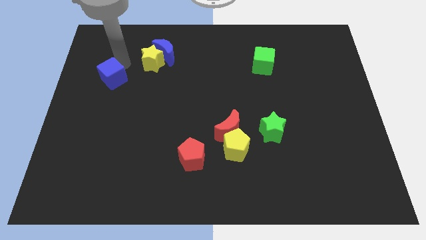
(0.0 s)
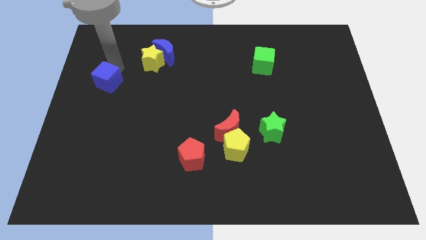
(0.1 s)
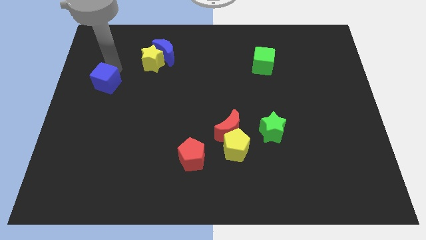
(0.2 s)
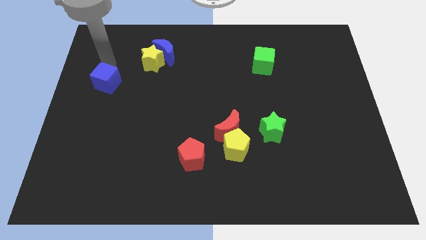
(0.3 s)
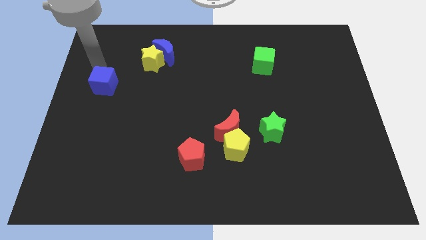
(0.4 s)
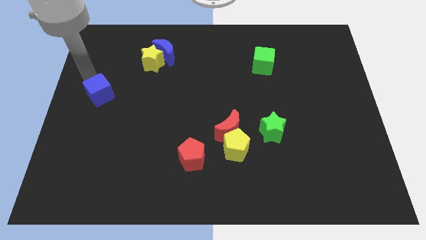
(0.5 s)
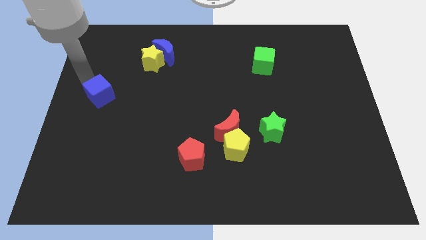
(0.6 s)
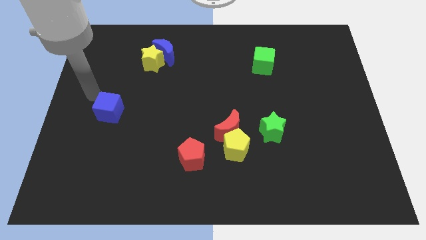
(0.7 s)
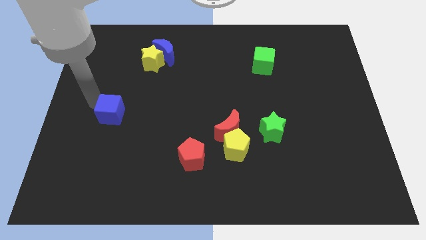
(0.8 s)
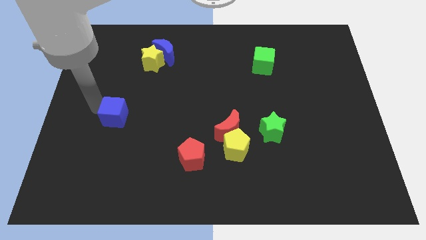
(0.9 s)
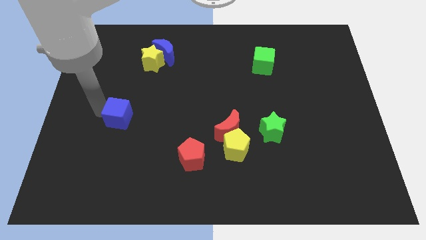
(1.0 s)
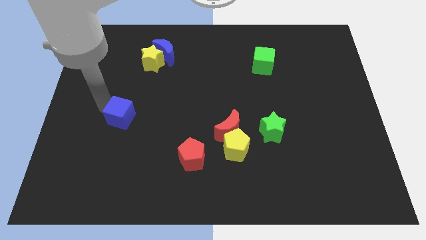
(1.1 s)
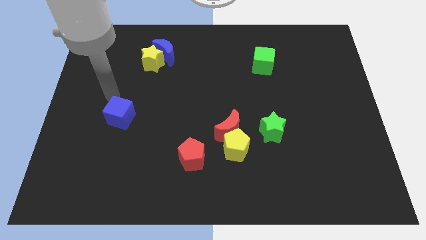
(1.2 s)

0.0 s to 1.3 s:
push the blue cube towards the red pentagon

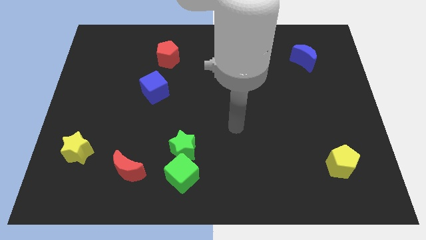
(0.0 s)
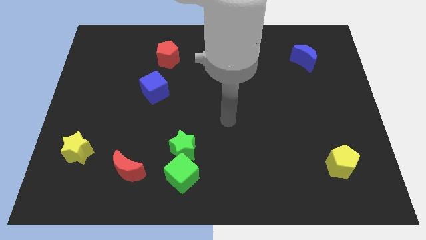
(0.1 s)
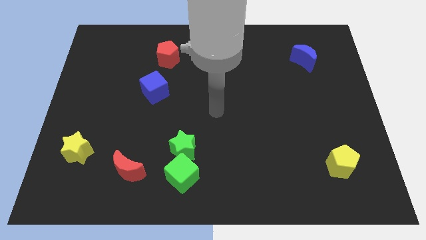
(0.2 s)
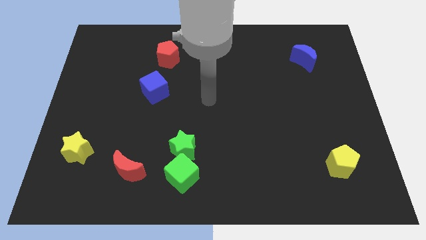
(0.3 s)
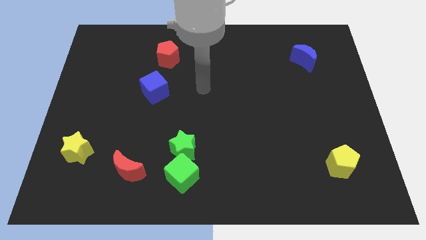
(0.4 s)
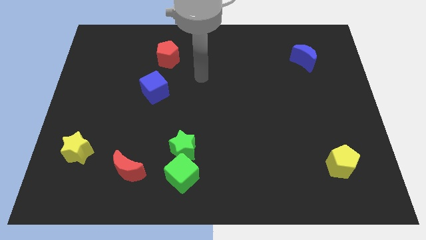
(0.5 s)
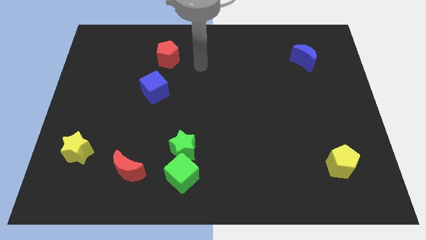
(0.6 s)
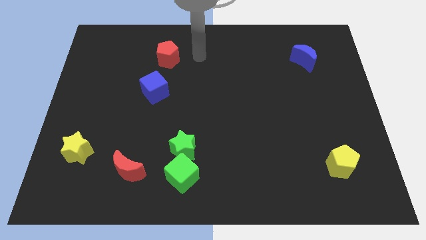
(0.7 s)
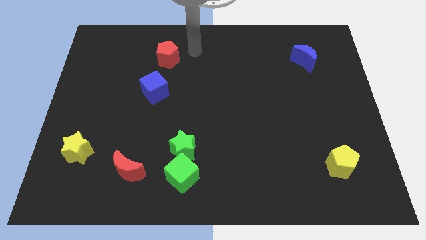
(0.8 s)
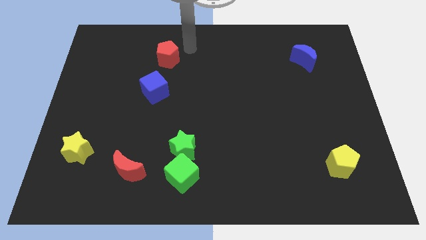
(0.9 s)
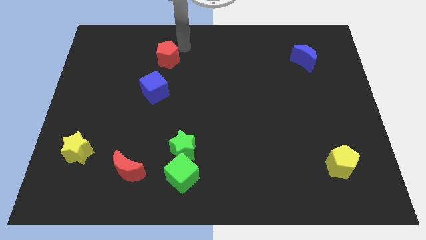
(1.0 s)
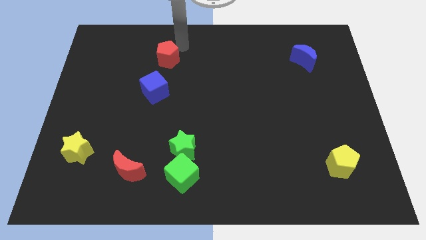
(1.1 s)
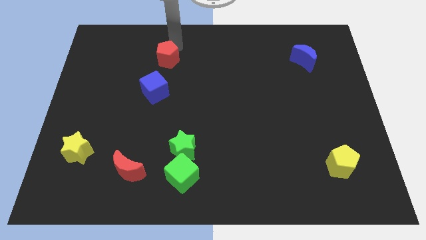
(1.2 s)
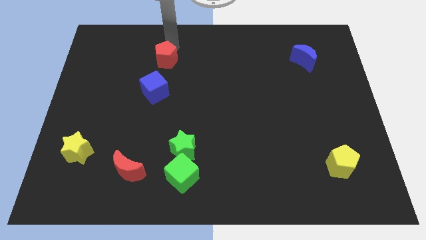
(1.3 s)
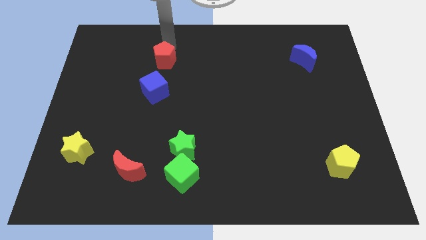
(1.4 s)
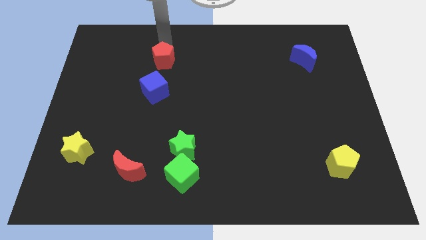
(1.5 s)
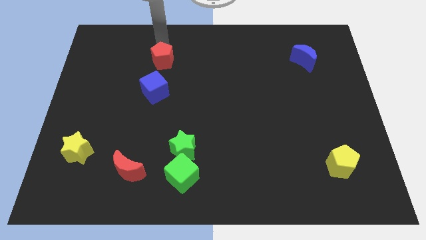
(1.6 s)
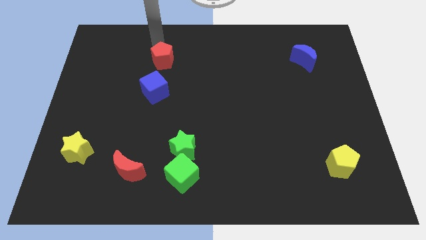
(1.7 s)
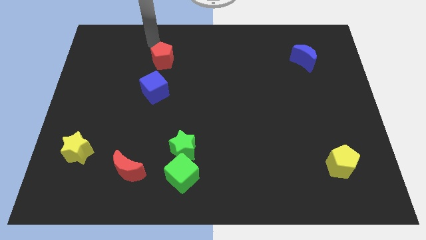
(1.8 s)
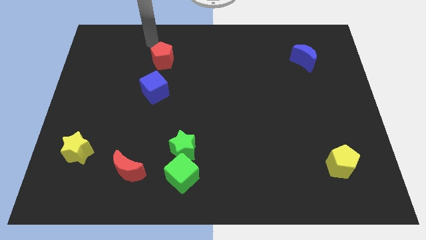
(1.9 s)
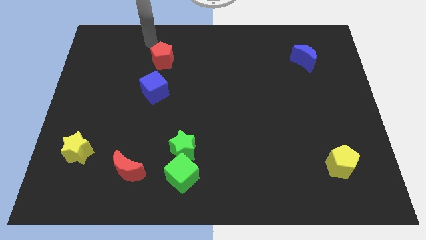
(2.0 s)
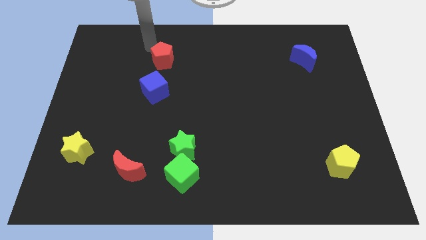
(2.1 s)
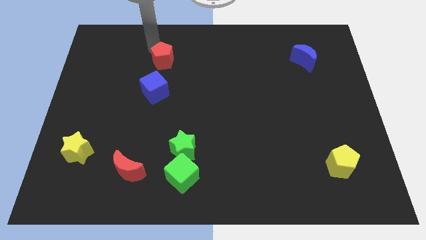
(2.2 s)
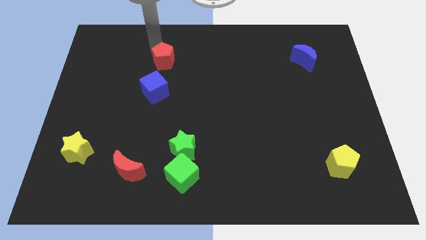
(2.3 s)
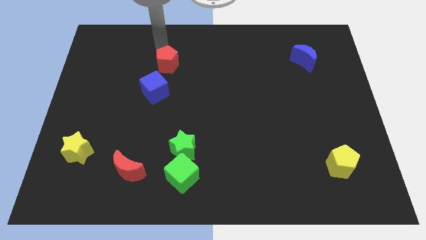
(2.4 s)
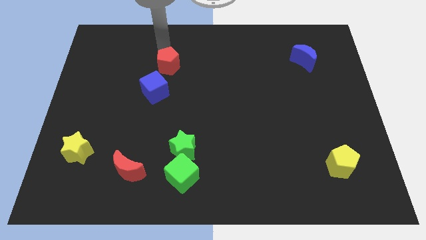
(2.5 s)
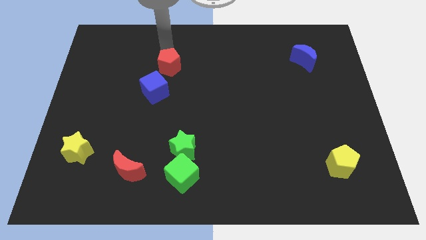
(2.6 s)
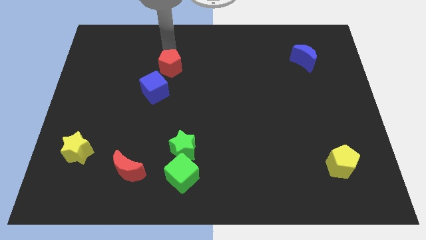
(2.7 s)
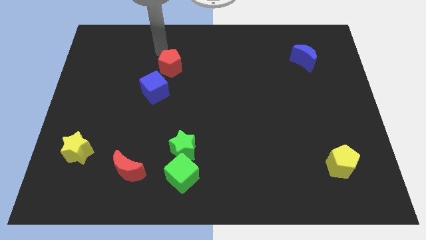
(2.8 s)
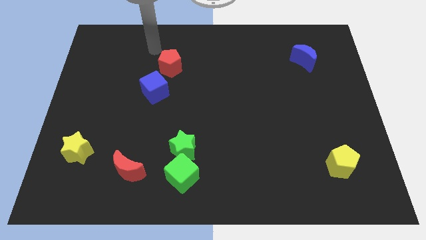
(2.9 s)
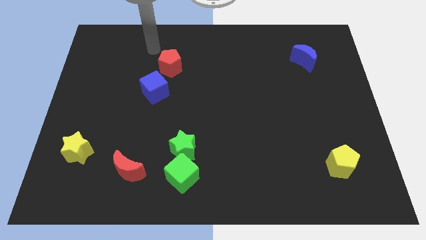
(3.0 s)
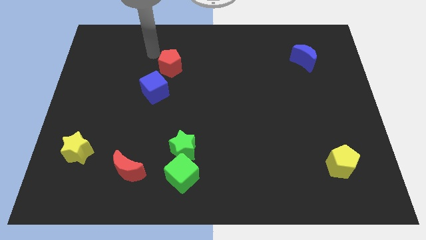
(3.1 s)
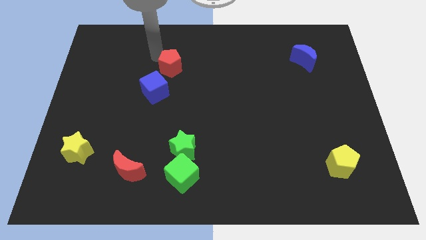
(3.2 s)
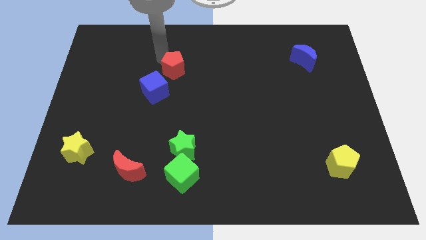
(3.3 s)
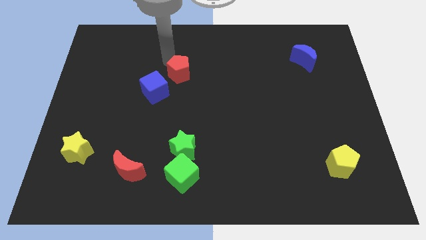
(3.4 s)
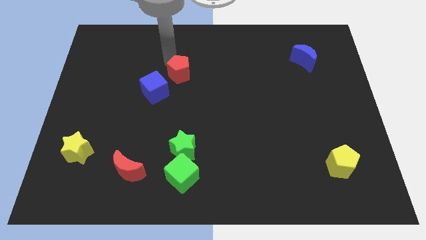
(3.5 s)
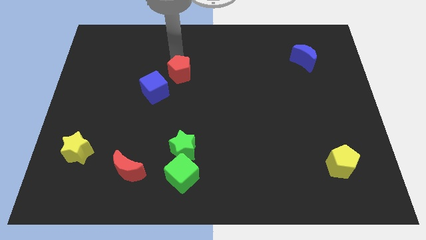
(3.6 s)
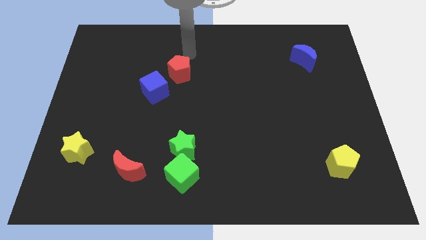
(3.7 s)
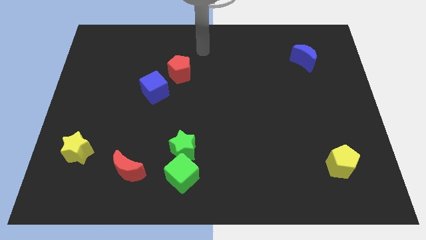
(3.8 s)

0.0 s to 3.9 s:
move the red pentagon vertically on top of the green star

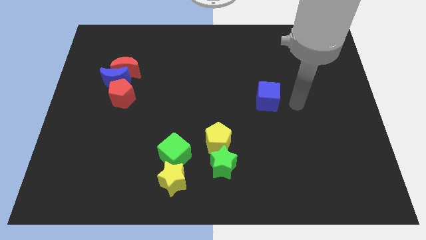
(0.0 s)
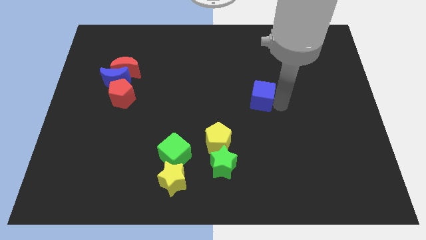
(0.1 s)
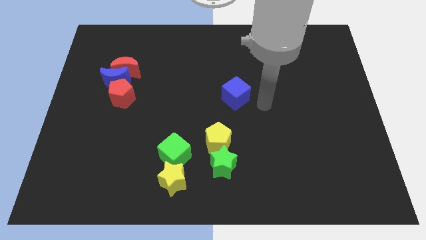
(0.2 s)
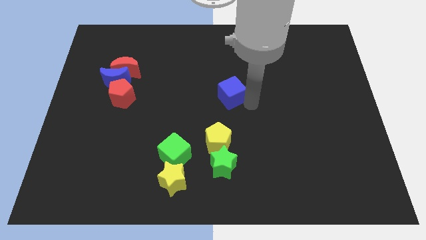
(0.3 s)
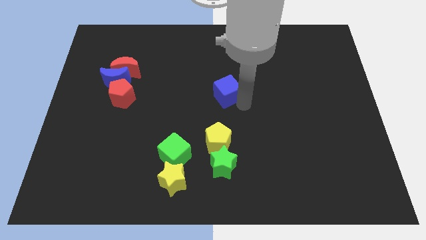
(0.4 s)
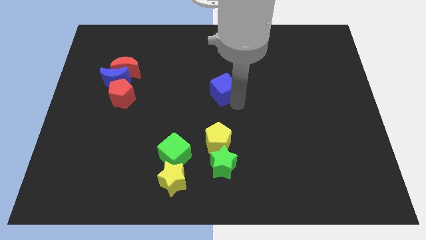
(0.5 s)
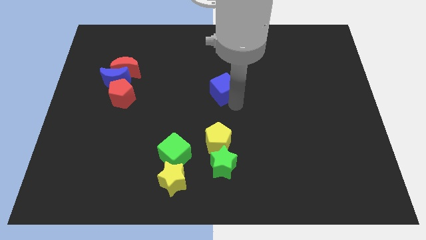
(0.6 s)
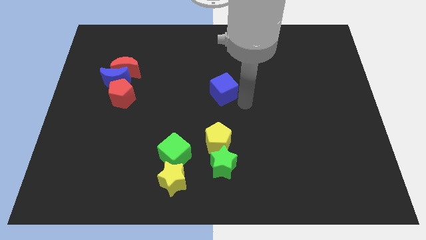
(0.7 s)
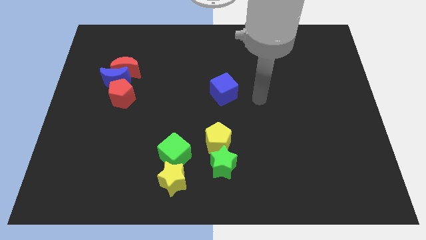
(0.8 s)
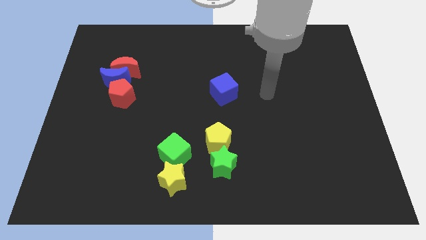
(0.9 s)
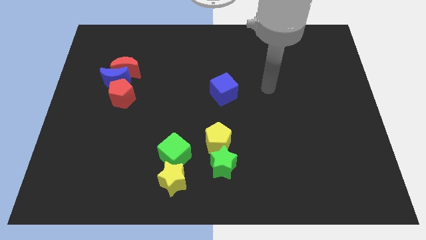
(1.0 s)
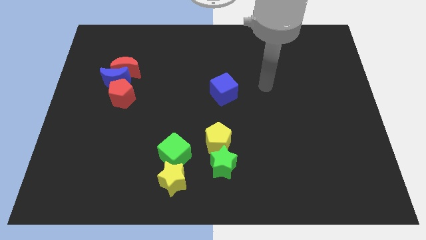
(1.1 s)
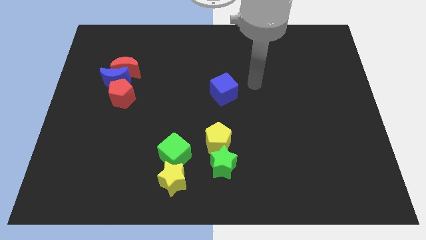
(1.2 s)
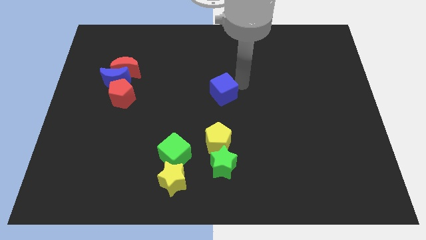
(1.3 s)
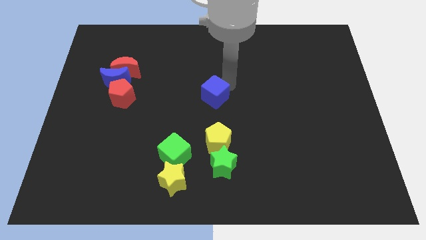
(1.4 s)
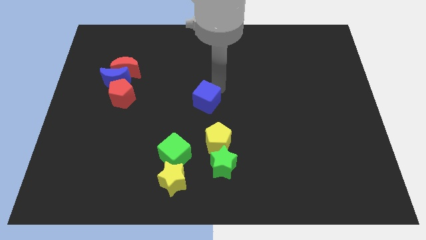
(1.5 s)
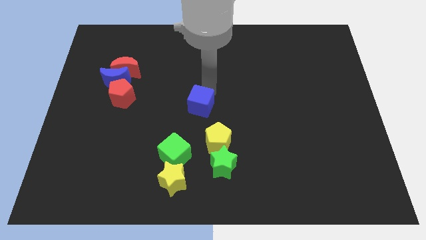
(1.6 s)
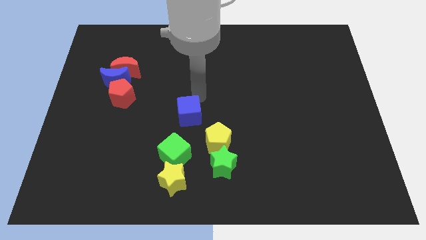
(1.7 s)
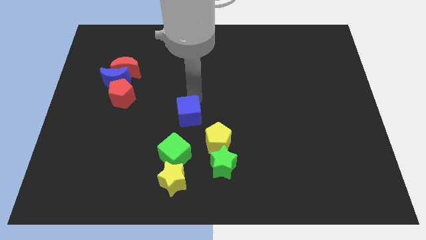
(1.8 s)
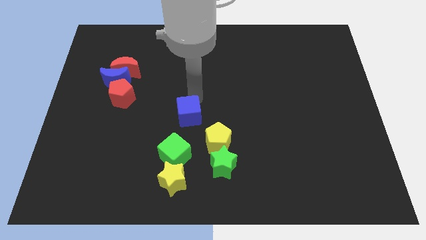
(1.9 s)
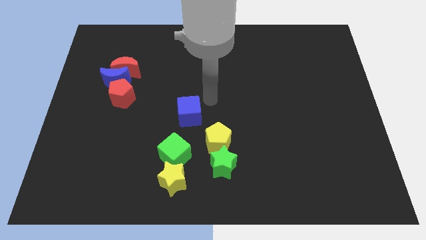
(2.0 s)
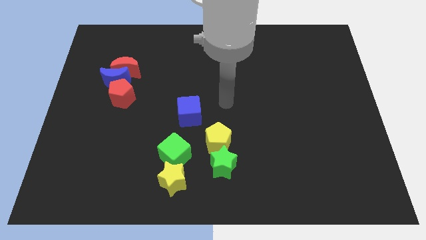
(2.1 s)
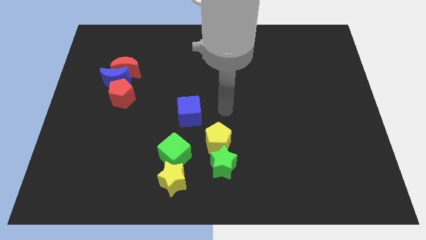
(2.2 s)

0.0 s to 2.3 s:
place the blue cube diagonally to red crescent

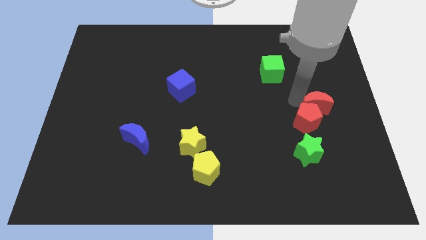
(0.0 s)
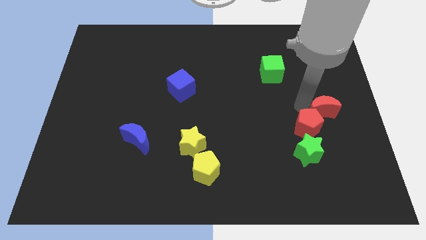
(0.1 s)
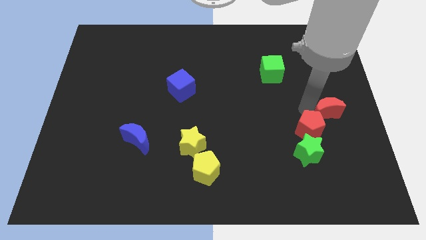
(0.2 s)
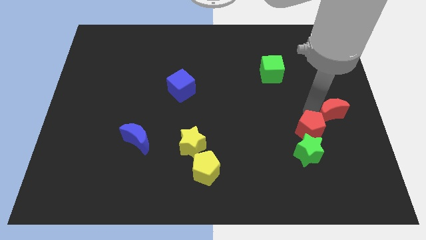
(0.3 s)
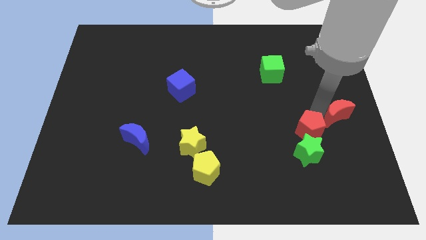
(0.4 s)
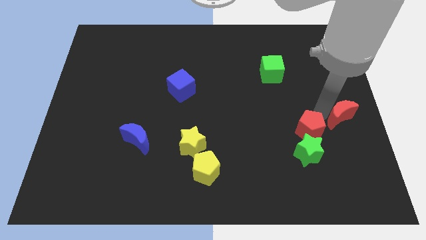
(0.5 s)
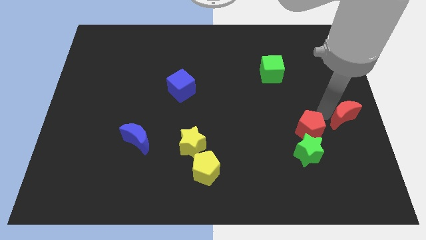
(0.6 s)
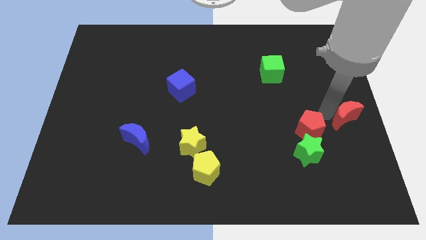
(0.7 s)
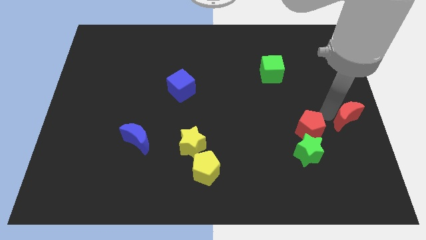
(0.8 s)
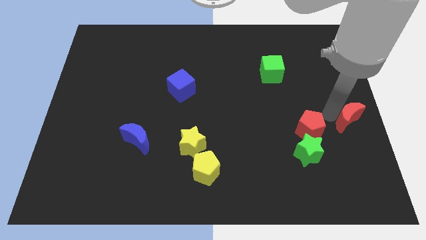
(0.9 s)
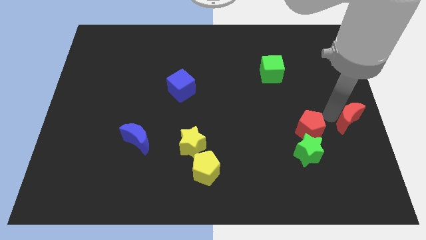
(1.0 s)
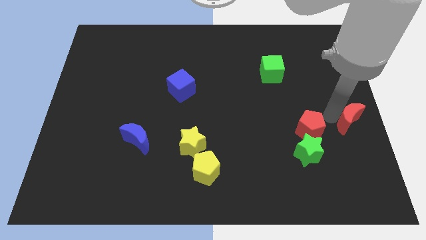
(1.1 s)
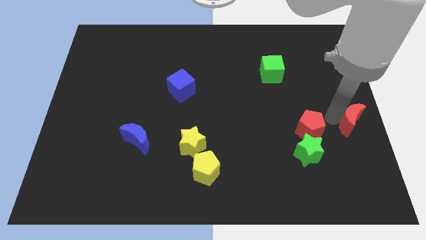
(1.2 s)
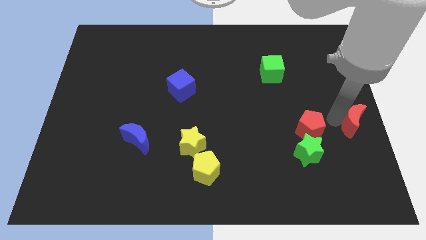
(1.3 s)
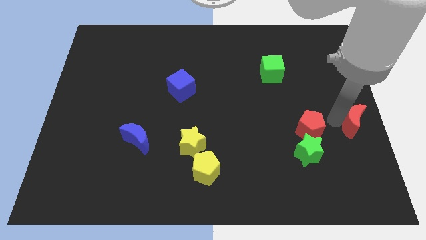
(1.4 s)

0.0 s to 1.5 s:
separate the red pentagon and red moon
